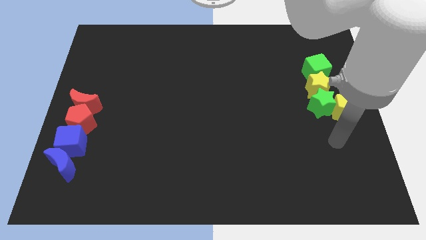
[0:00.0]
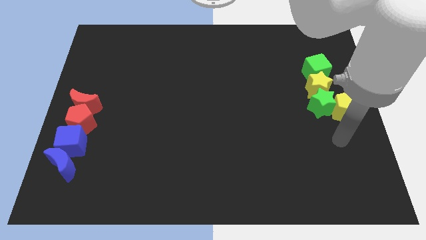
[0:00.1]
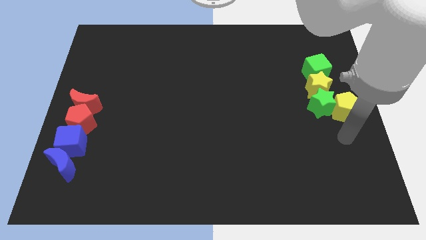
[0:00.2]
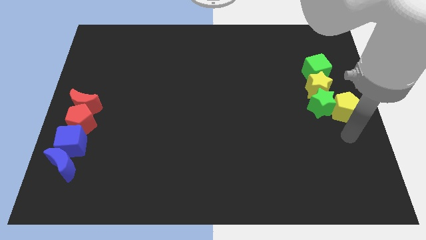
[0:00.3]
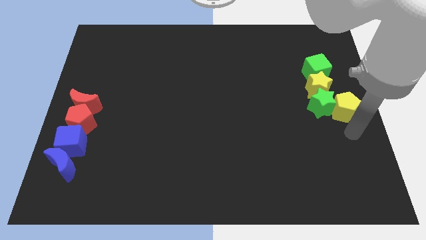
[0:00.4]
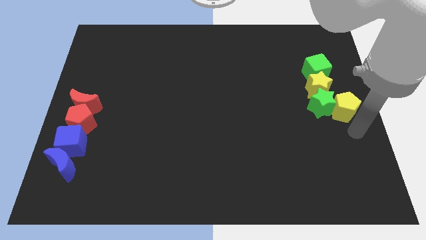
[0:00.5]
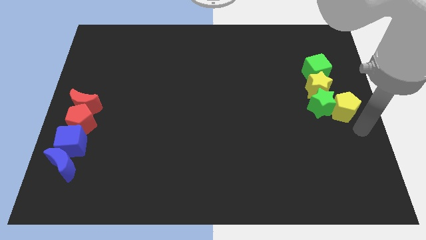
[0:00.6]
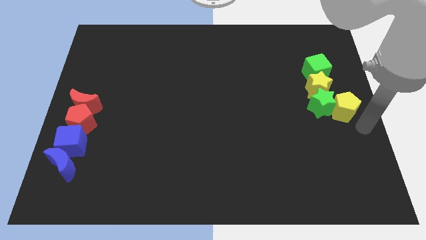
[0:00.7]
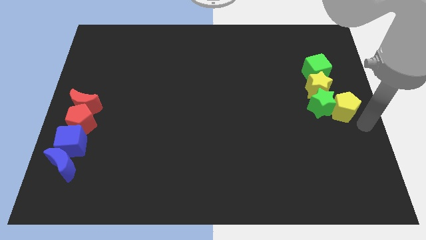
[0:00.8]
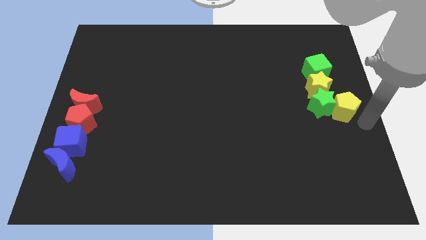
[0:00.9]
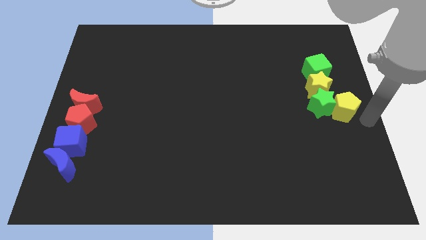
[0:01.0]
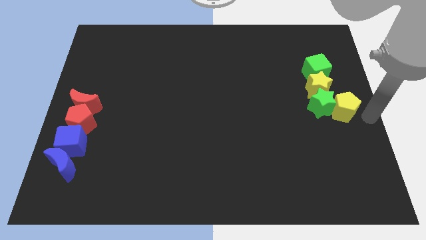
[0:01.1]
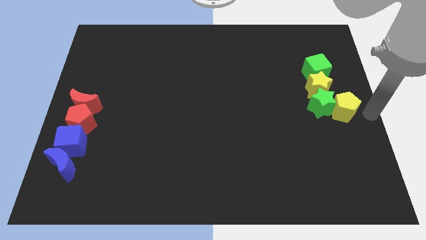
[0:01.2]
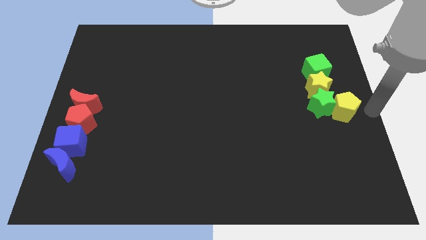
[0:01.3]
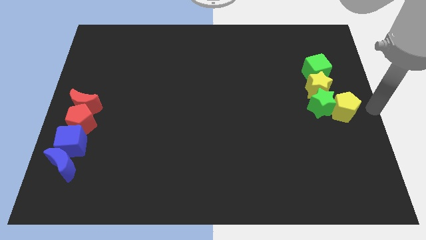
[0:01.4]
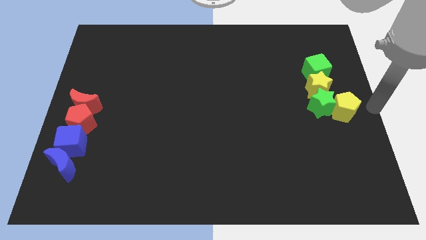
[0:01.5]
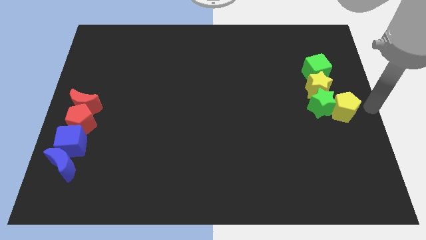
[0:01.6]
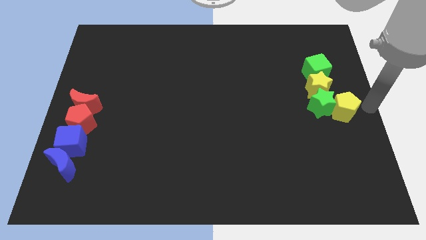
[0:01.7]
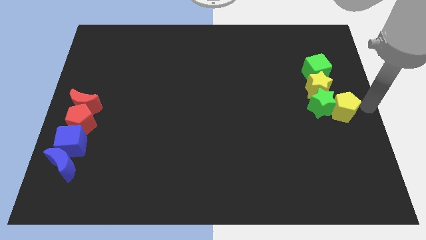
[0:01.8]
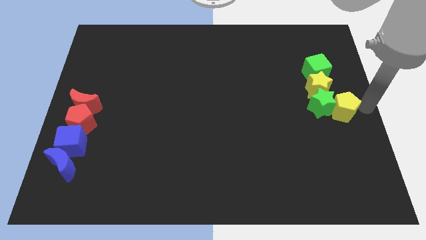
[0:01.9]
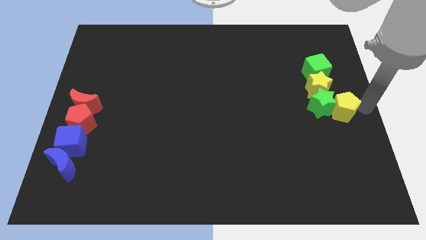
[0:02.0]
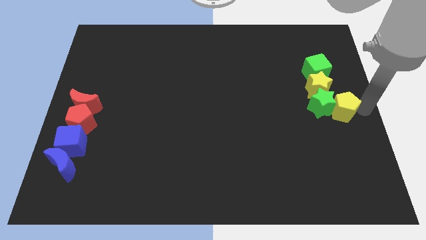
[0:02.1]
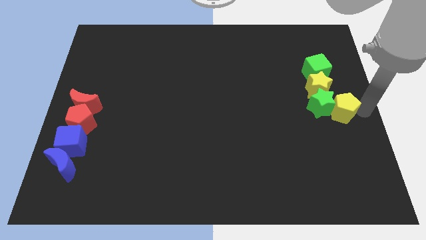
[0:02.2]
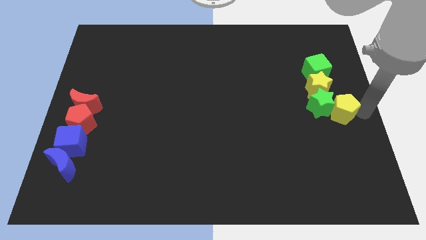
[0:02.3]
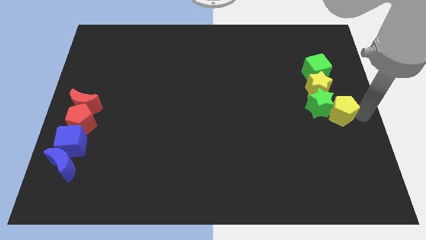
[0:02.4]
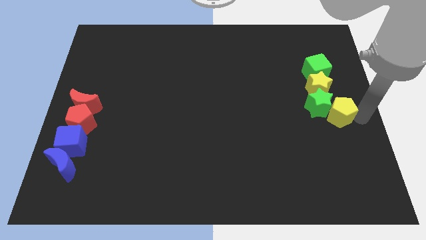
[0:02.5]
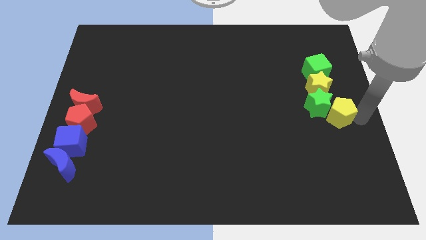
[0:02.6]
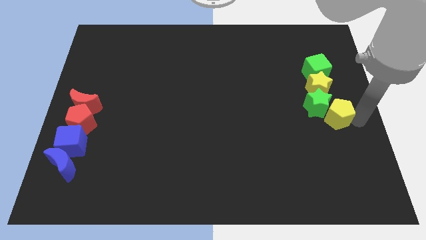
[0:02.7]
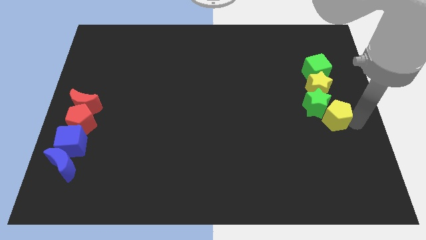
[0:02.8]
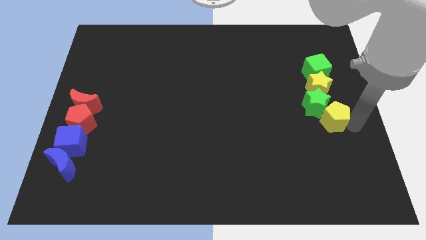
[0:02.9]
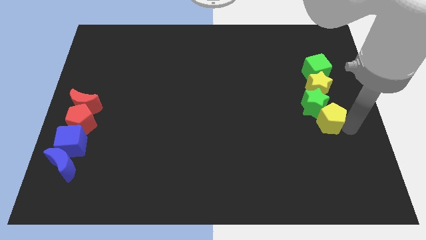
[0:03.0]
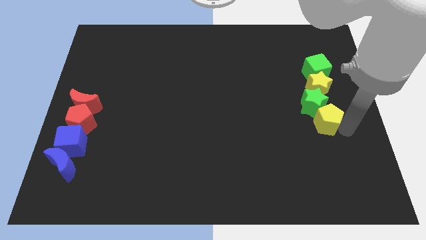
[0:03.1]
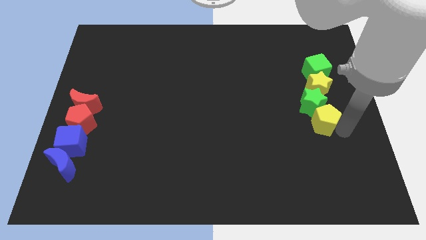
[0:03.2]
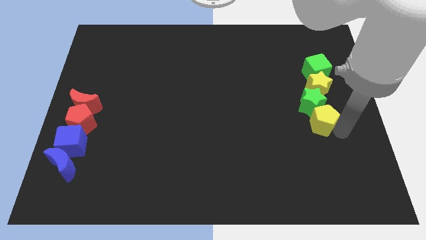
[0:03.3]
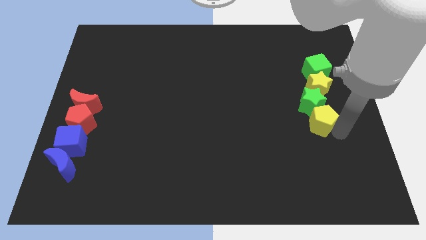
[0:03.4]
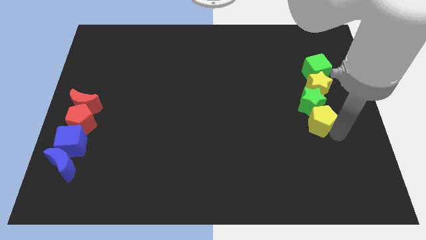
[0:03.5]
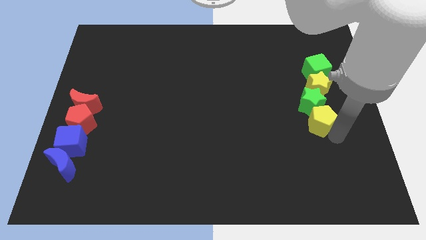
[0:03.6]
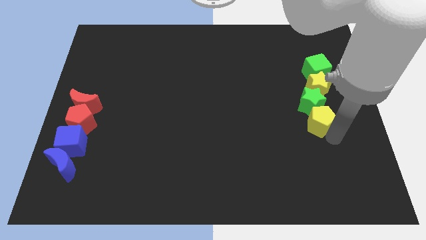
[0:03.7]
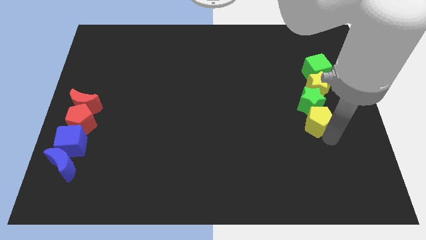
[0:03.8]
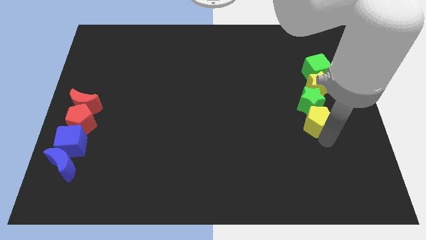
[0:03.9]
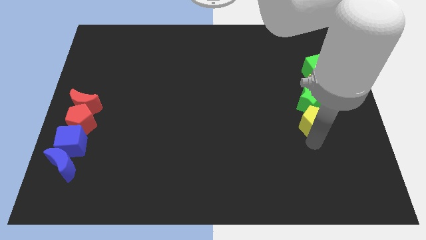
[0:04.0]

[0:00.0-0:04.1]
move the yellow pentagon into the bottom side of the green star

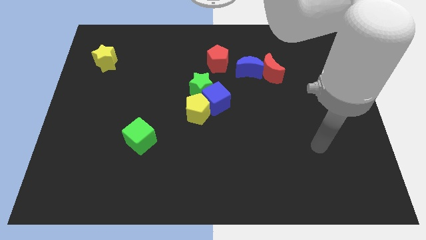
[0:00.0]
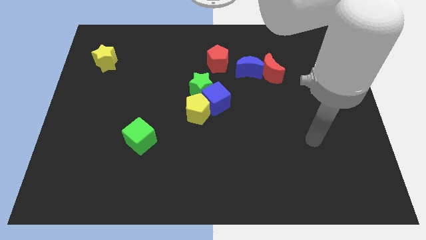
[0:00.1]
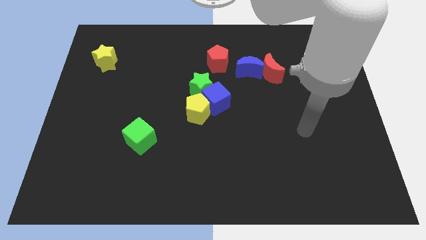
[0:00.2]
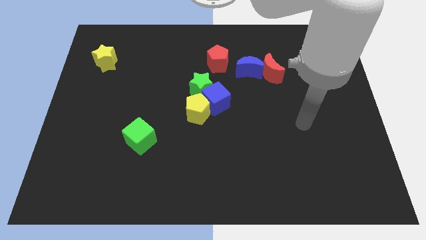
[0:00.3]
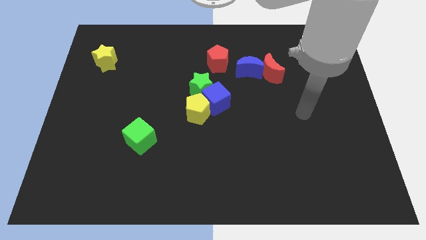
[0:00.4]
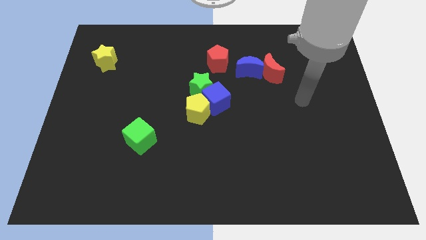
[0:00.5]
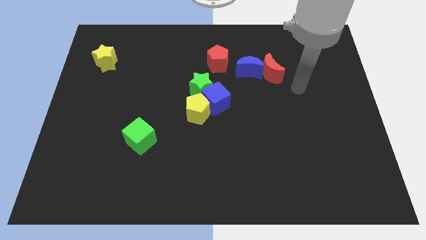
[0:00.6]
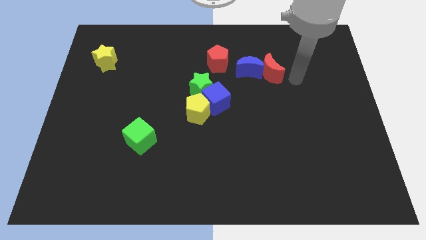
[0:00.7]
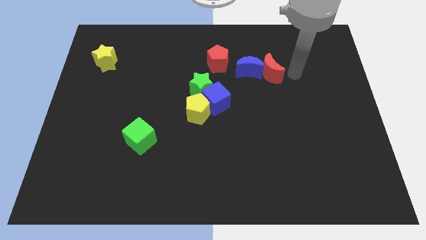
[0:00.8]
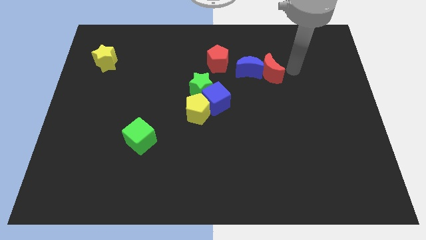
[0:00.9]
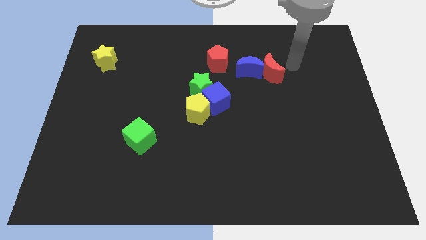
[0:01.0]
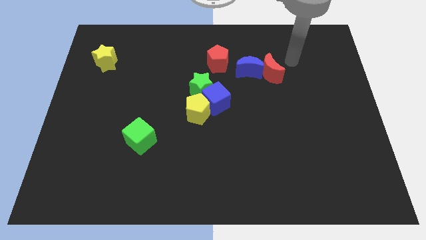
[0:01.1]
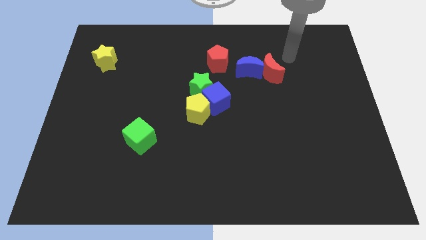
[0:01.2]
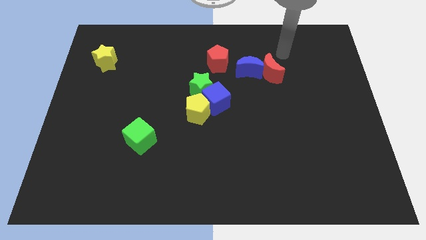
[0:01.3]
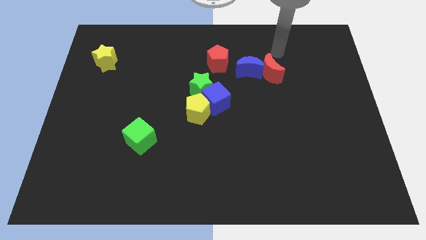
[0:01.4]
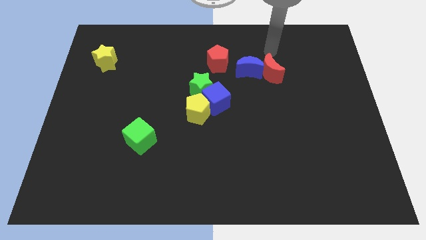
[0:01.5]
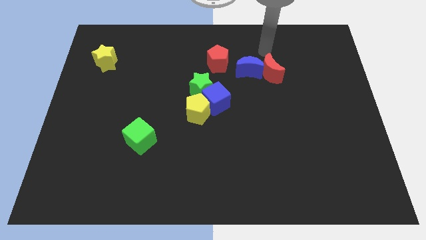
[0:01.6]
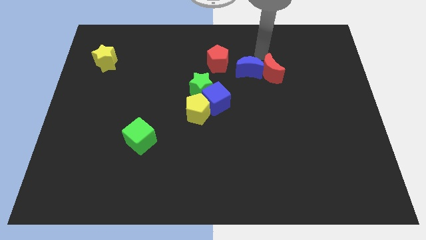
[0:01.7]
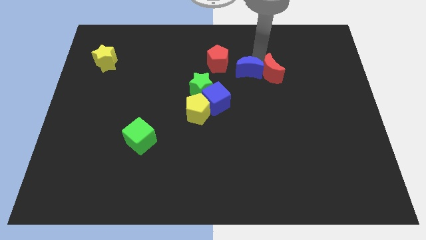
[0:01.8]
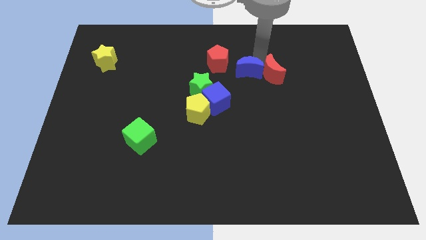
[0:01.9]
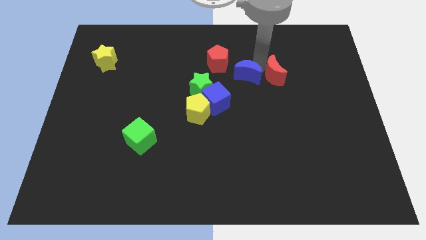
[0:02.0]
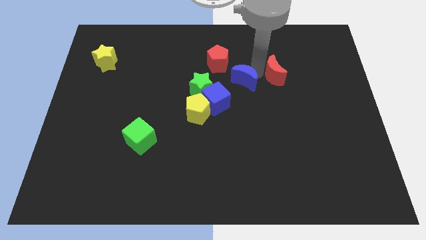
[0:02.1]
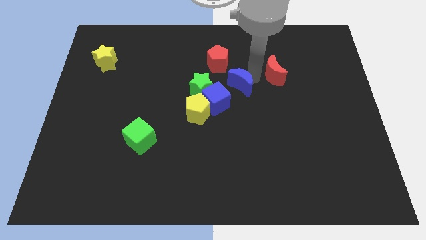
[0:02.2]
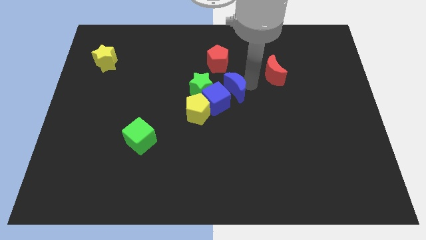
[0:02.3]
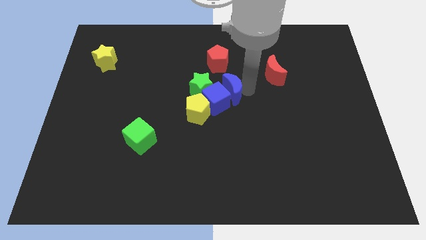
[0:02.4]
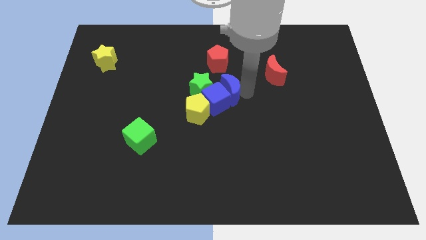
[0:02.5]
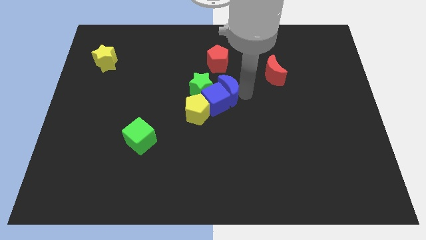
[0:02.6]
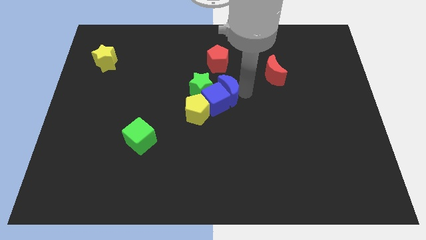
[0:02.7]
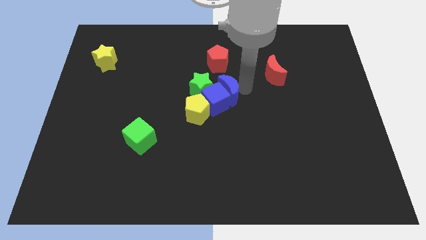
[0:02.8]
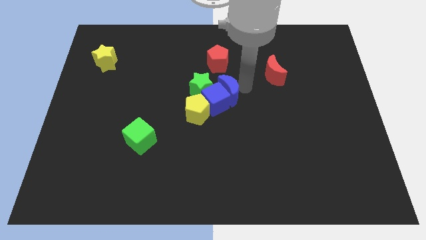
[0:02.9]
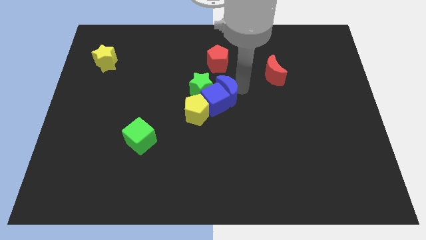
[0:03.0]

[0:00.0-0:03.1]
push the blue moon towards the center of the board

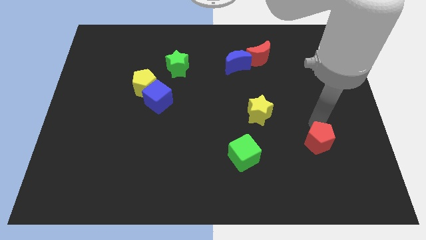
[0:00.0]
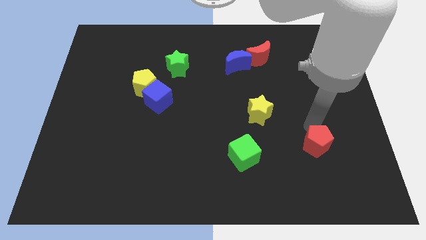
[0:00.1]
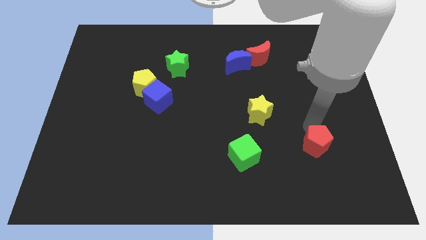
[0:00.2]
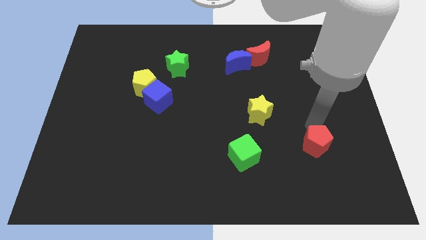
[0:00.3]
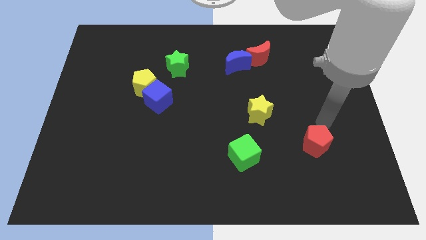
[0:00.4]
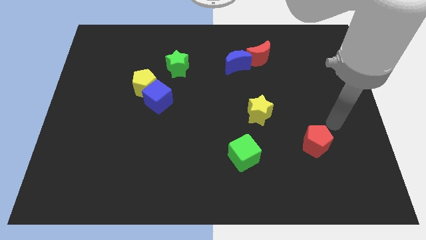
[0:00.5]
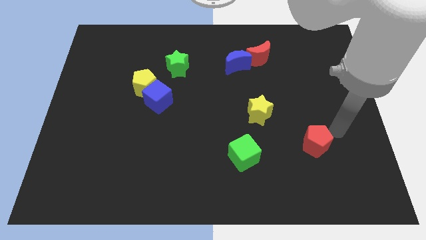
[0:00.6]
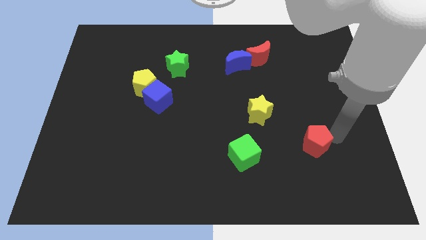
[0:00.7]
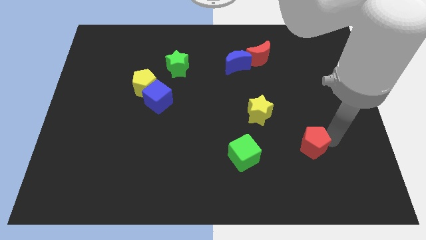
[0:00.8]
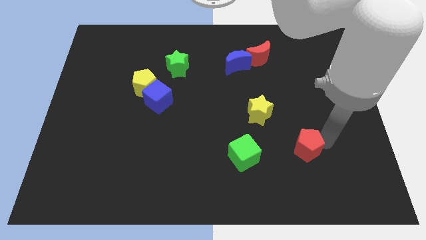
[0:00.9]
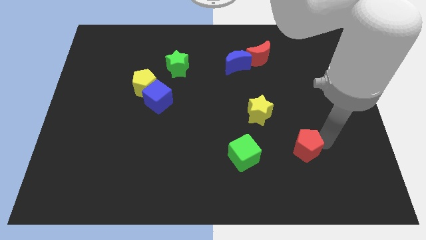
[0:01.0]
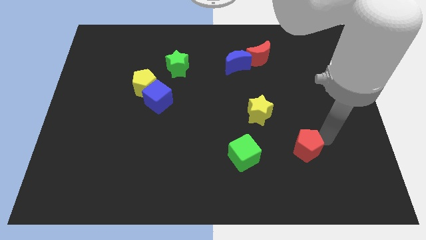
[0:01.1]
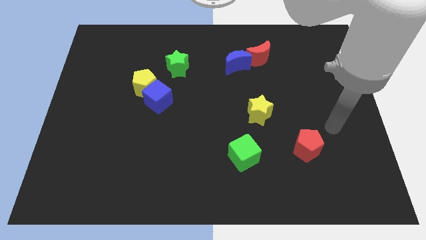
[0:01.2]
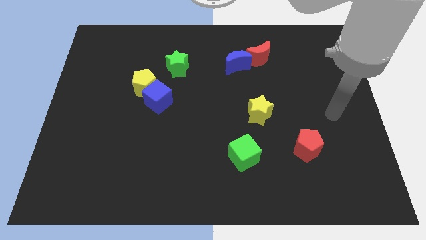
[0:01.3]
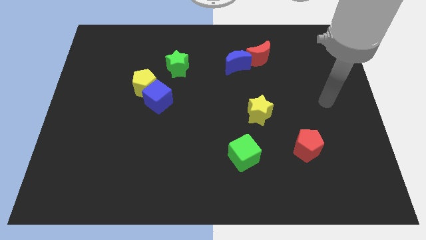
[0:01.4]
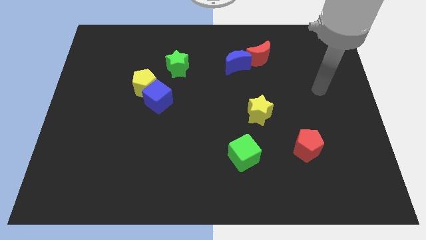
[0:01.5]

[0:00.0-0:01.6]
push red pentagon to the right of green cube

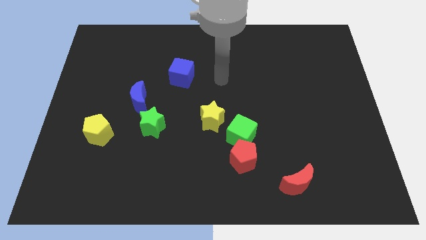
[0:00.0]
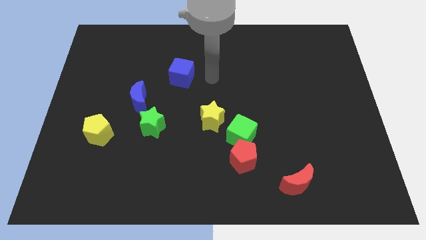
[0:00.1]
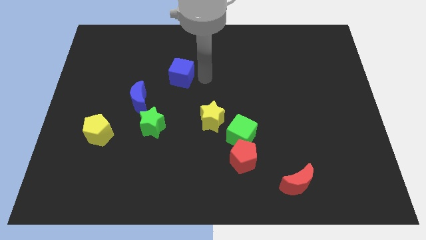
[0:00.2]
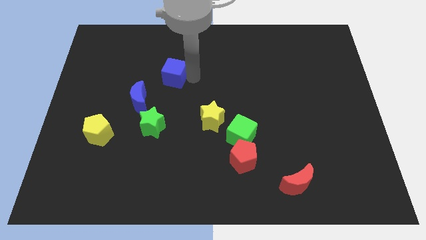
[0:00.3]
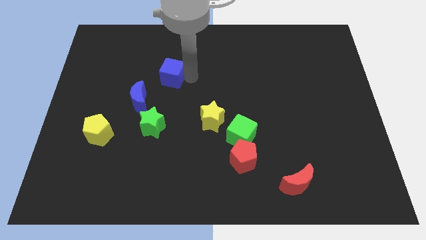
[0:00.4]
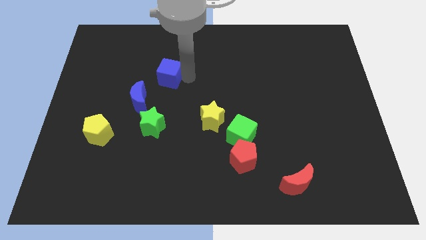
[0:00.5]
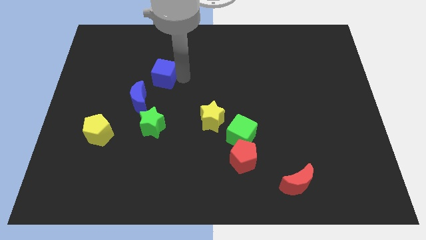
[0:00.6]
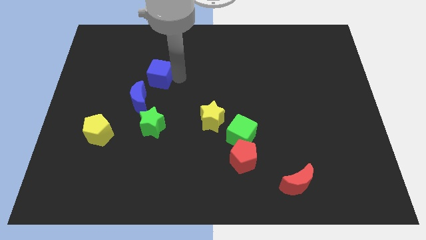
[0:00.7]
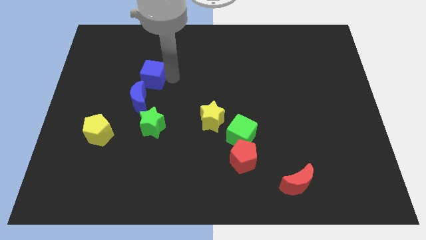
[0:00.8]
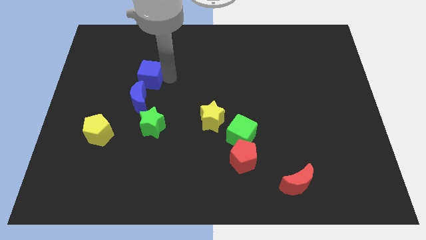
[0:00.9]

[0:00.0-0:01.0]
move the blue cube slightly to the left
